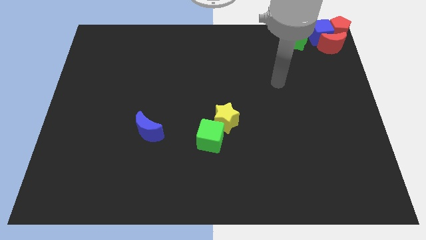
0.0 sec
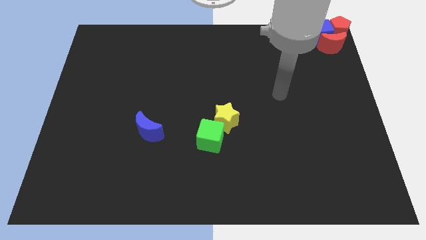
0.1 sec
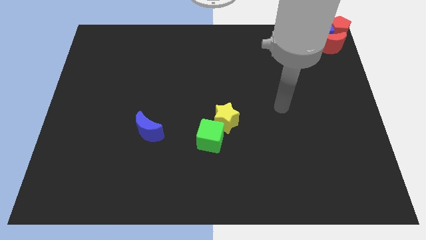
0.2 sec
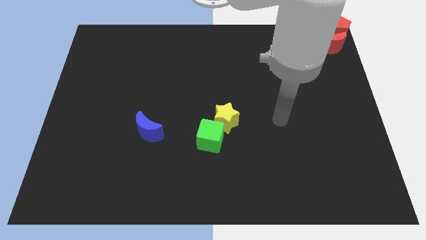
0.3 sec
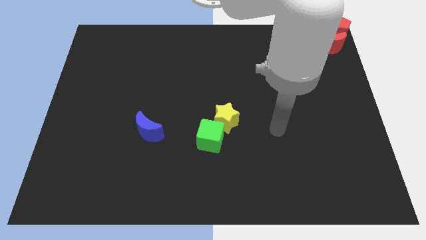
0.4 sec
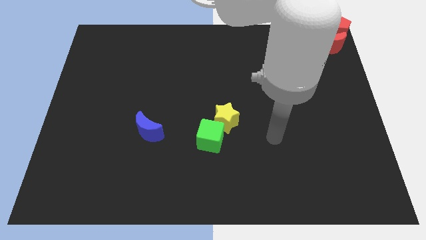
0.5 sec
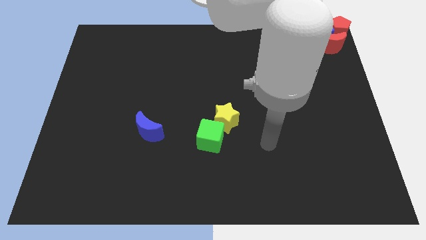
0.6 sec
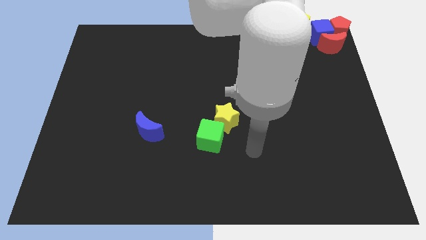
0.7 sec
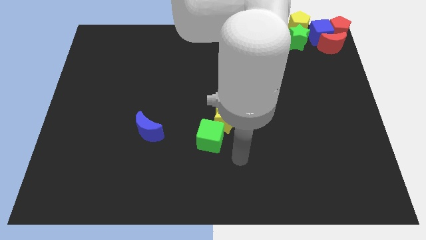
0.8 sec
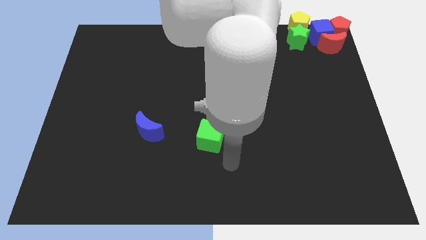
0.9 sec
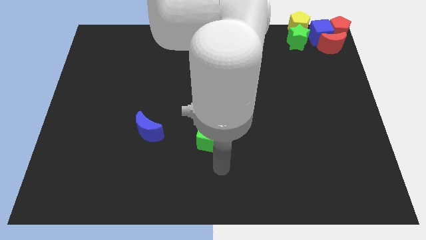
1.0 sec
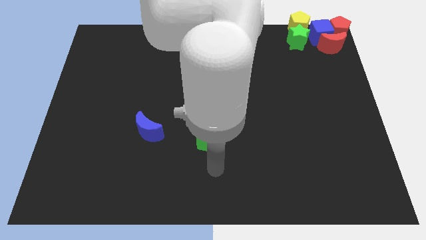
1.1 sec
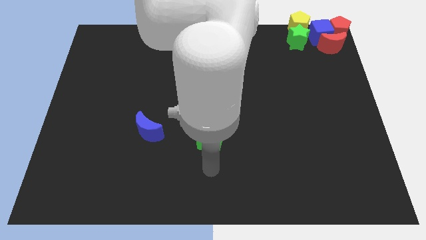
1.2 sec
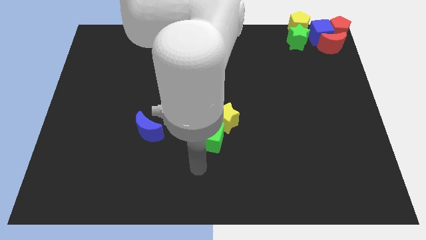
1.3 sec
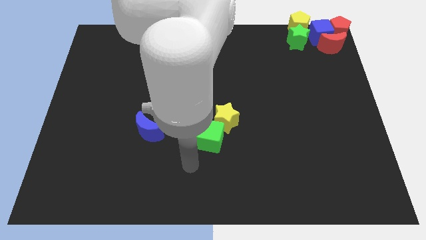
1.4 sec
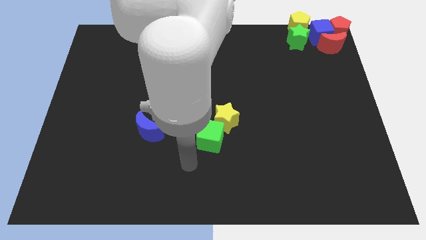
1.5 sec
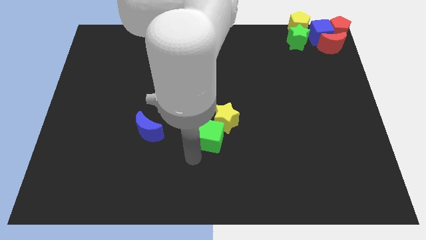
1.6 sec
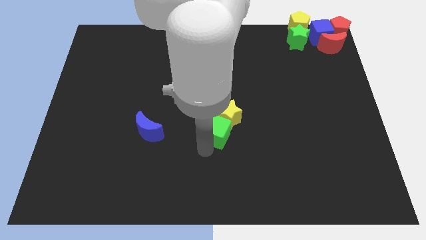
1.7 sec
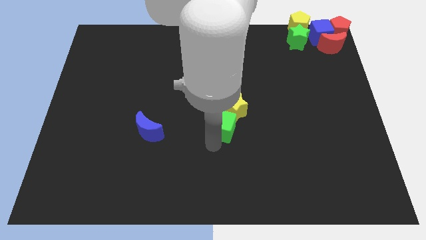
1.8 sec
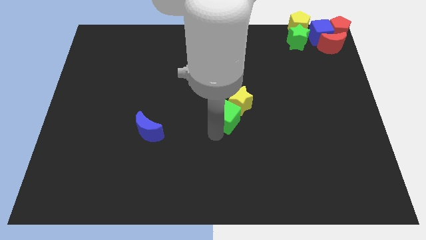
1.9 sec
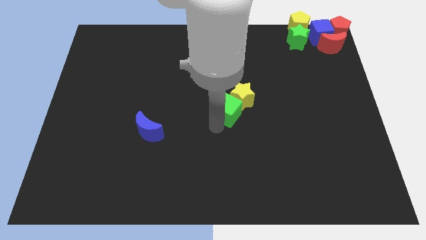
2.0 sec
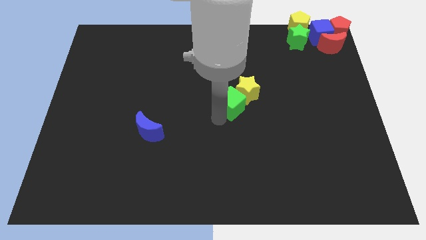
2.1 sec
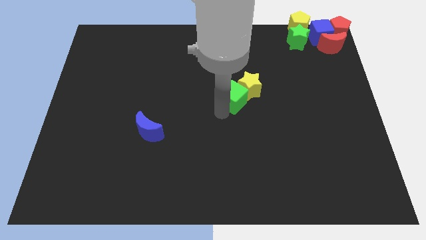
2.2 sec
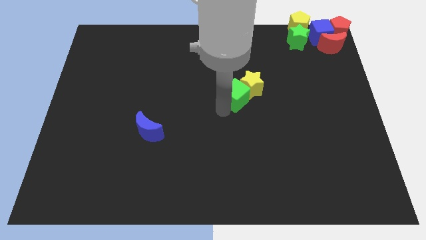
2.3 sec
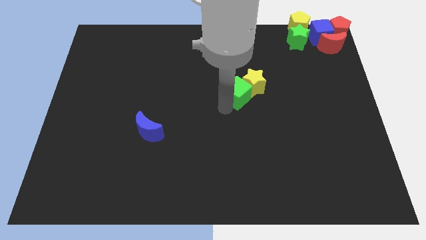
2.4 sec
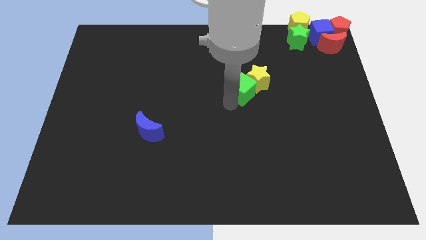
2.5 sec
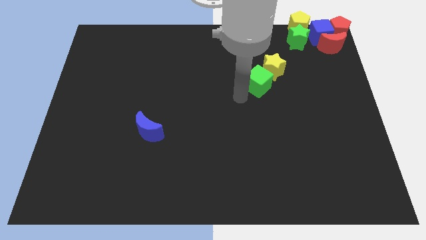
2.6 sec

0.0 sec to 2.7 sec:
move the green cube with yellow star towards top of the board

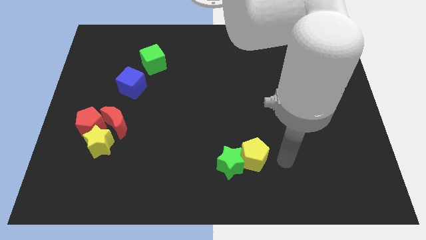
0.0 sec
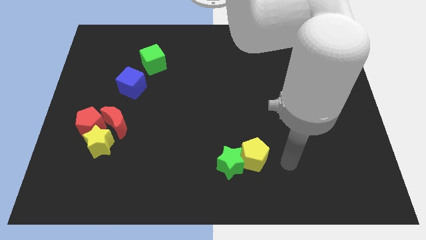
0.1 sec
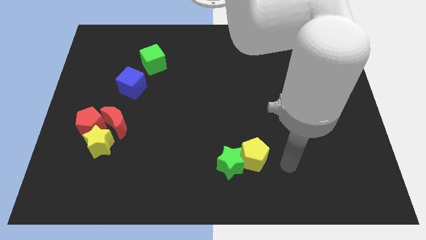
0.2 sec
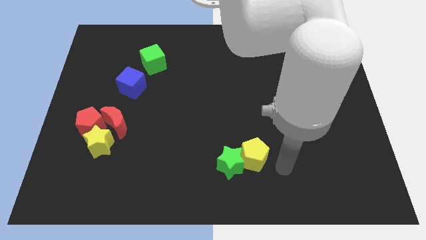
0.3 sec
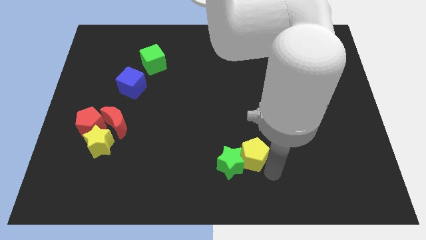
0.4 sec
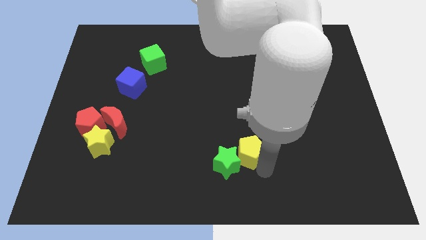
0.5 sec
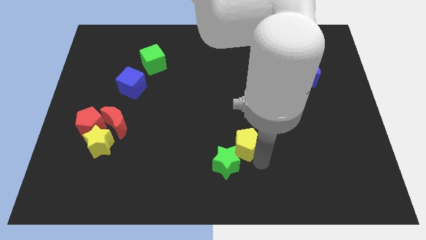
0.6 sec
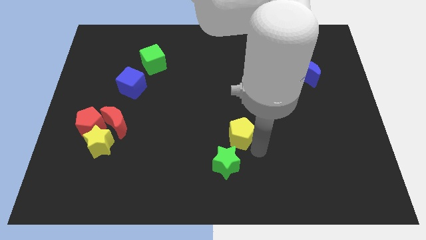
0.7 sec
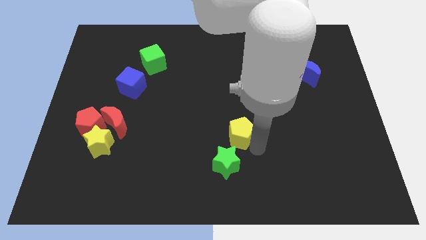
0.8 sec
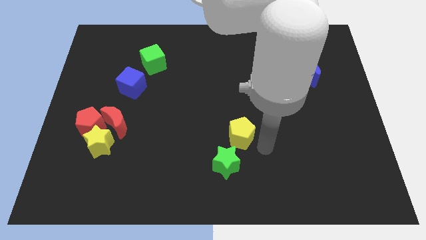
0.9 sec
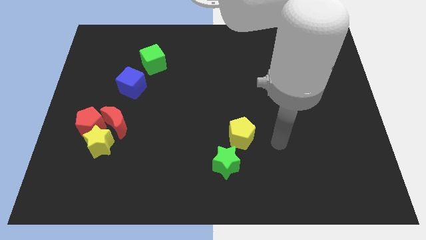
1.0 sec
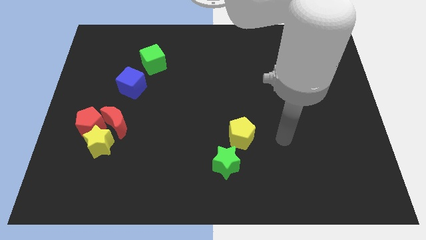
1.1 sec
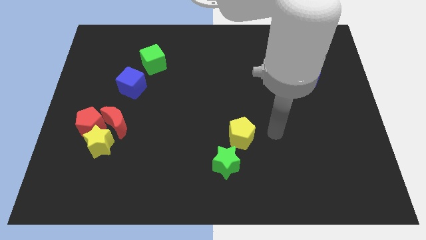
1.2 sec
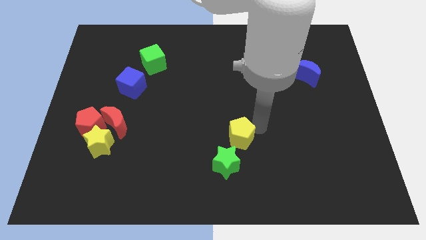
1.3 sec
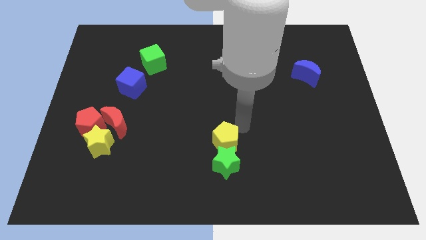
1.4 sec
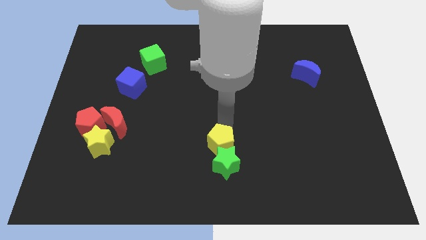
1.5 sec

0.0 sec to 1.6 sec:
move the yellow pentagon above the green star

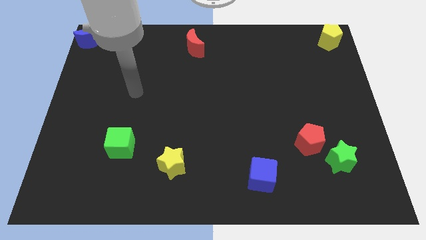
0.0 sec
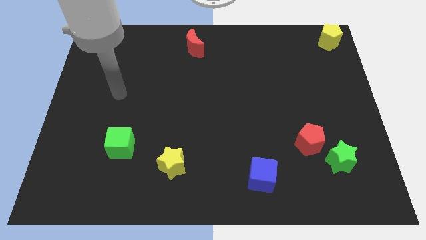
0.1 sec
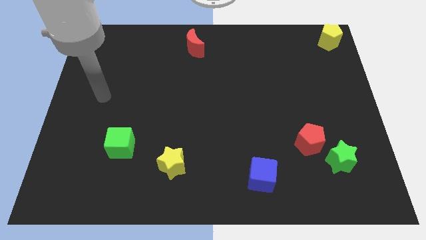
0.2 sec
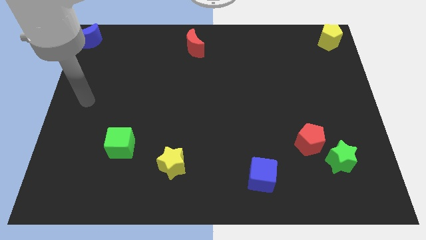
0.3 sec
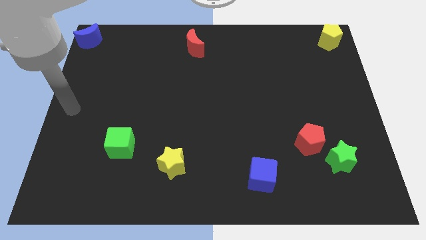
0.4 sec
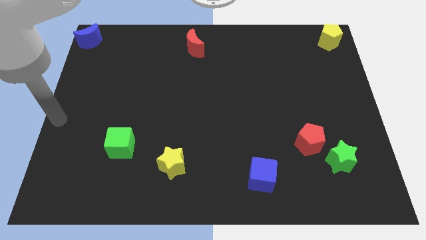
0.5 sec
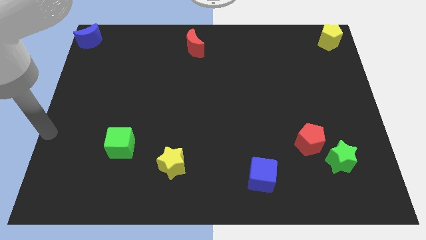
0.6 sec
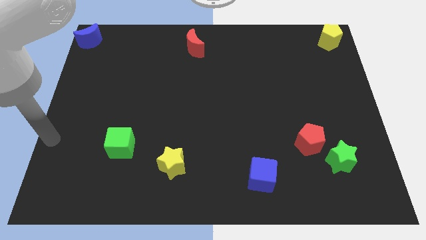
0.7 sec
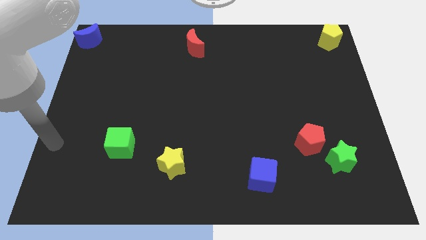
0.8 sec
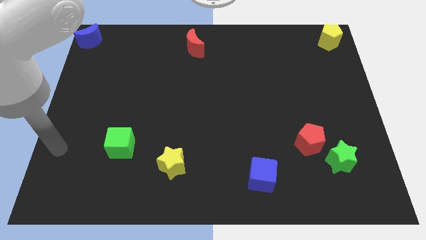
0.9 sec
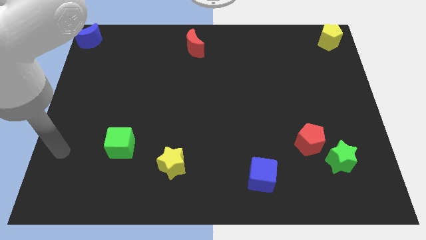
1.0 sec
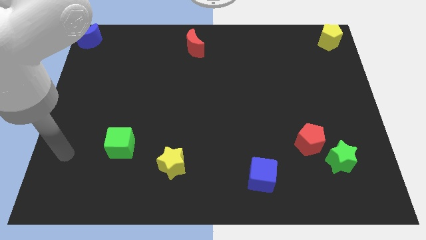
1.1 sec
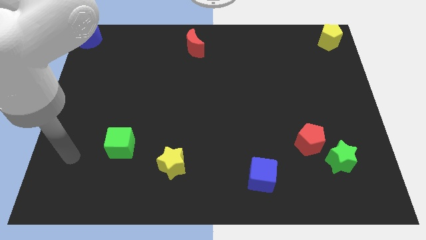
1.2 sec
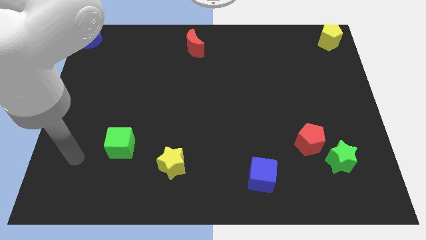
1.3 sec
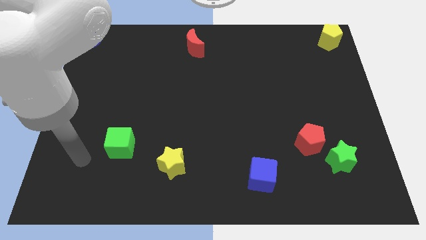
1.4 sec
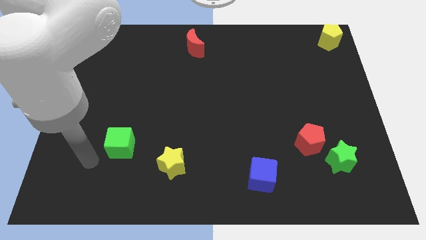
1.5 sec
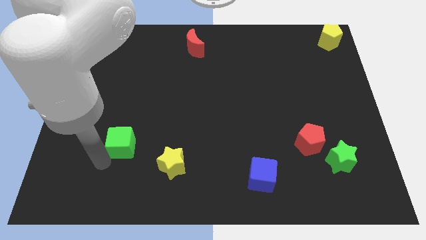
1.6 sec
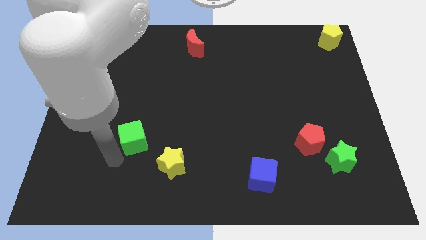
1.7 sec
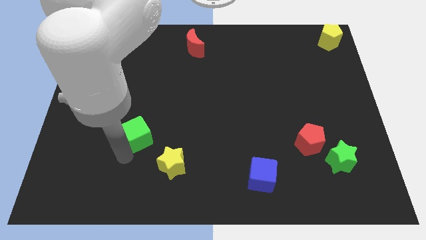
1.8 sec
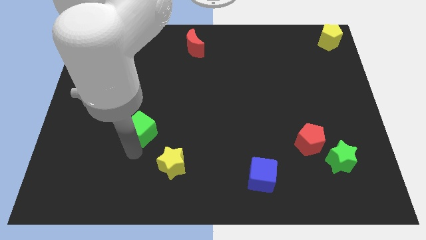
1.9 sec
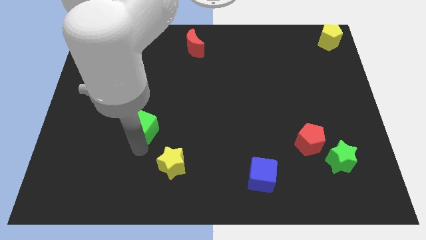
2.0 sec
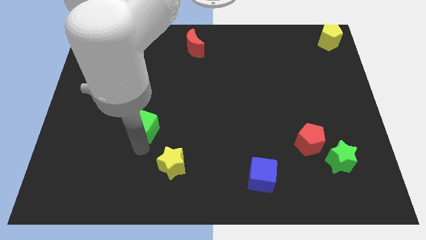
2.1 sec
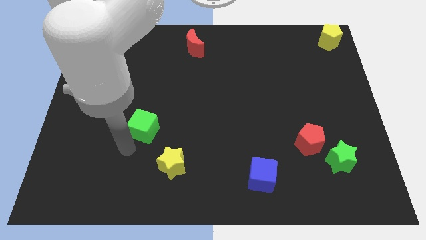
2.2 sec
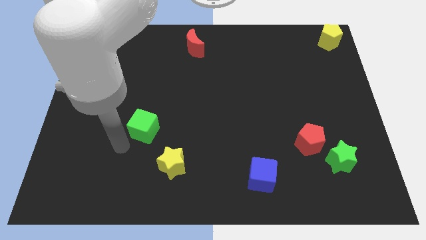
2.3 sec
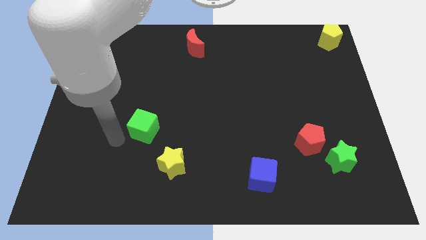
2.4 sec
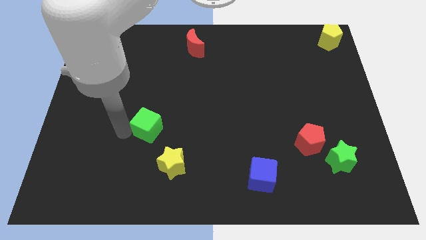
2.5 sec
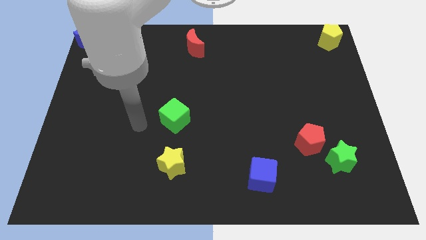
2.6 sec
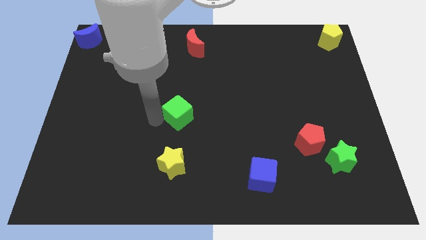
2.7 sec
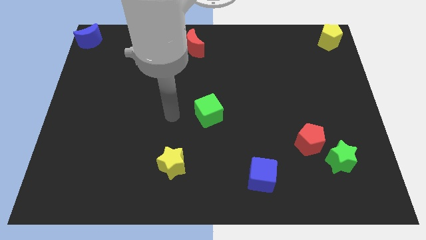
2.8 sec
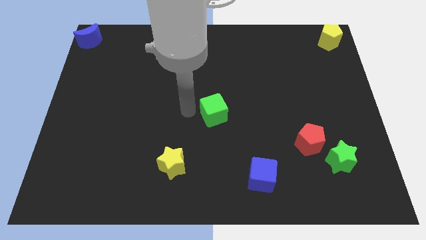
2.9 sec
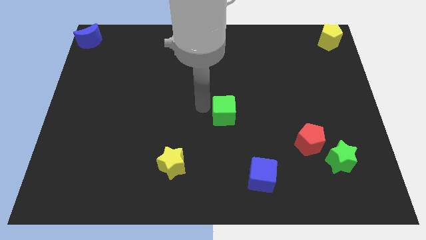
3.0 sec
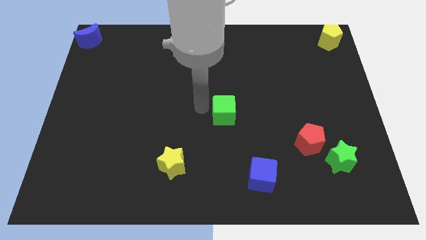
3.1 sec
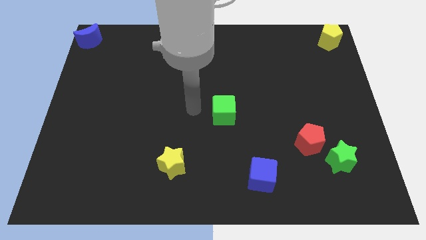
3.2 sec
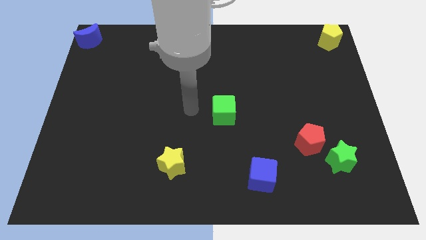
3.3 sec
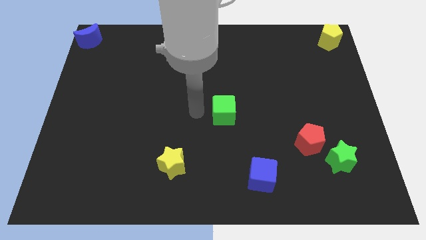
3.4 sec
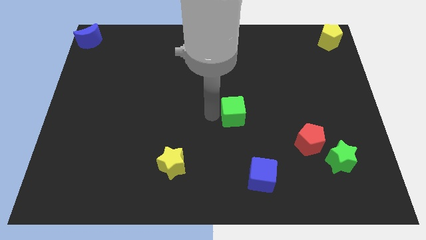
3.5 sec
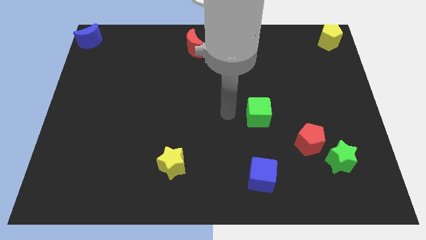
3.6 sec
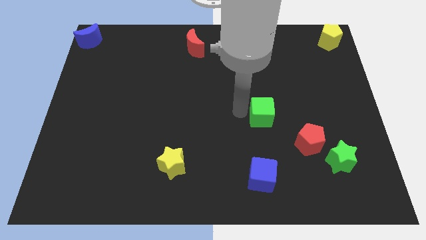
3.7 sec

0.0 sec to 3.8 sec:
push the green cube to the top of the blue cube

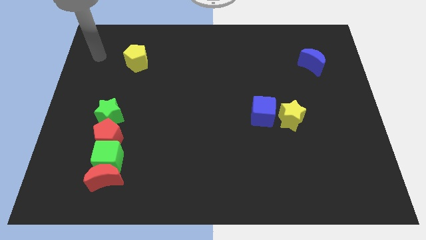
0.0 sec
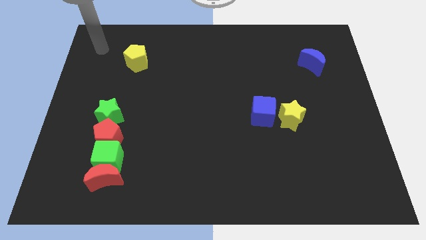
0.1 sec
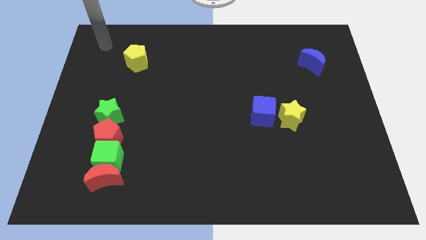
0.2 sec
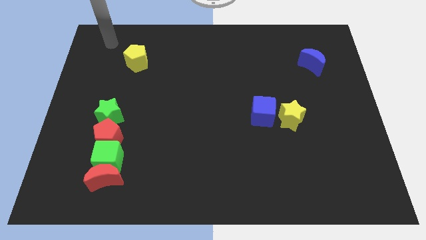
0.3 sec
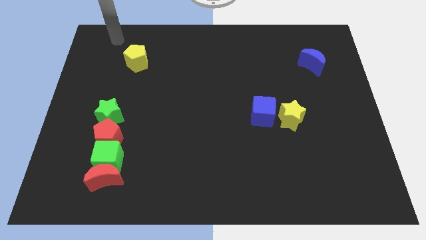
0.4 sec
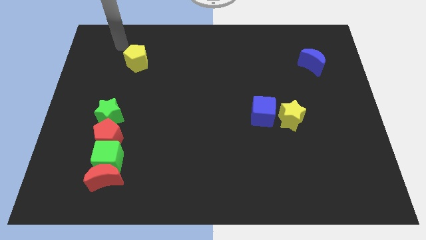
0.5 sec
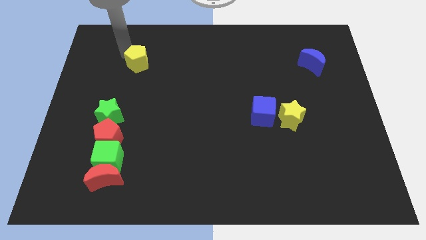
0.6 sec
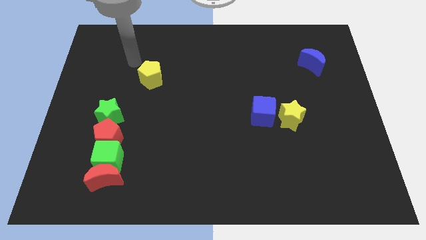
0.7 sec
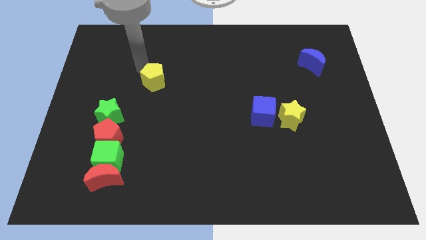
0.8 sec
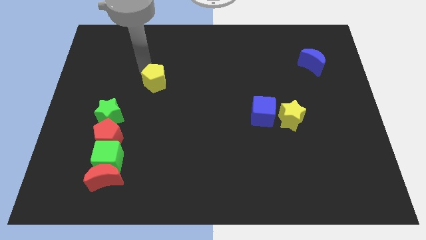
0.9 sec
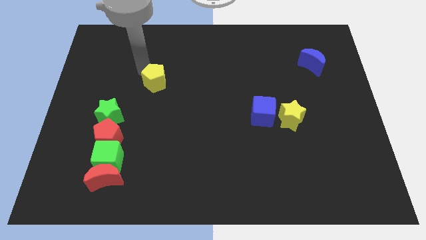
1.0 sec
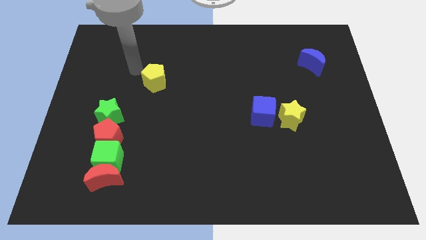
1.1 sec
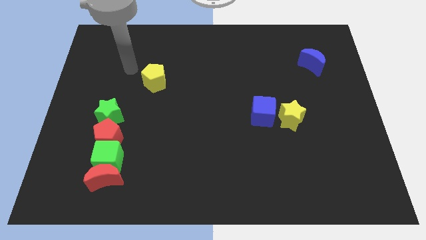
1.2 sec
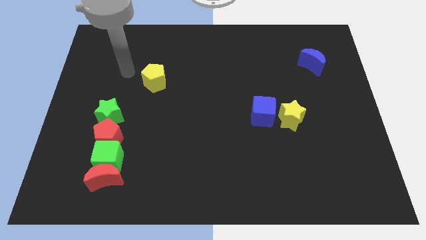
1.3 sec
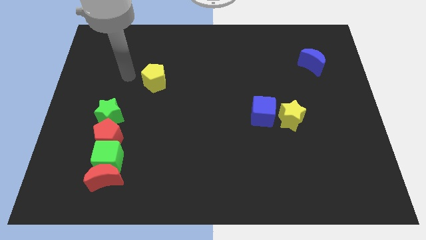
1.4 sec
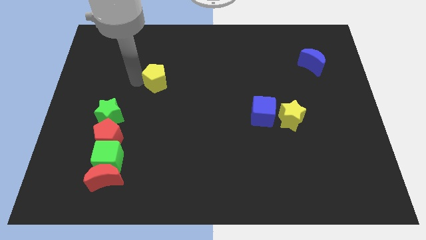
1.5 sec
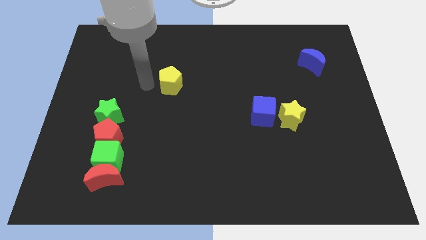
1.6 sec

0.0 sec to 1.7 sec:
place the yellow pentagon diagonal top right to green star
